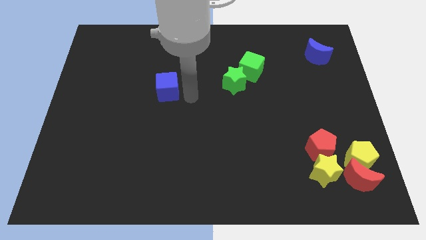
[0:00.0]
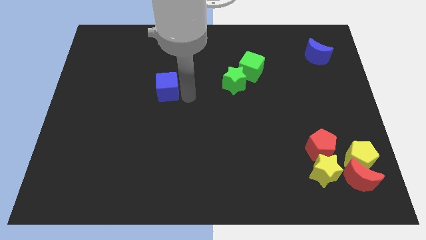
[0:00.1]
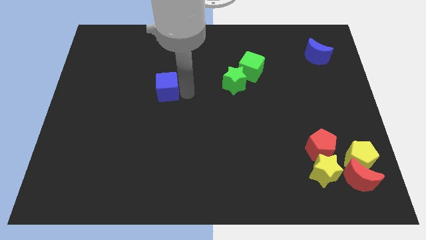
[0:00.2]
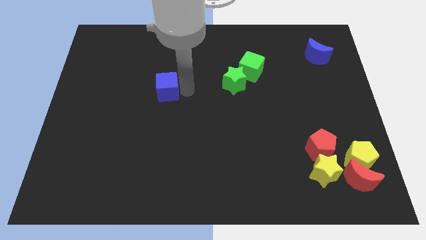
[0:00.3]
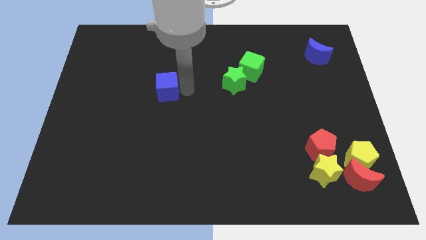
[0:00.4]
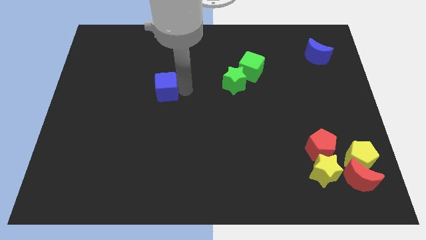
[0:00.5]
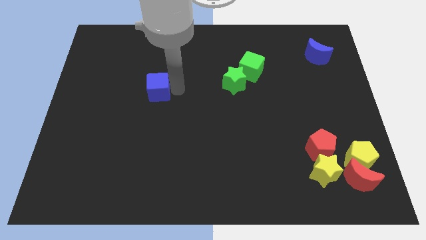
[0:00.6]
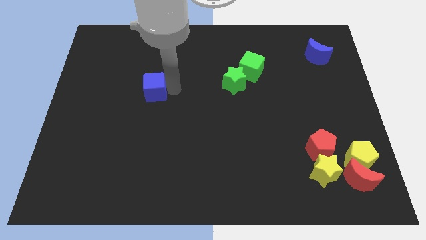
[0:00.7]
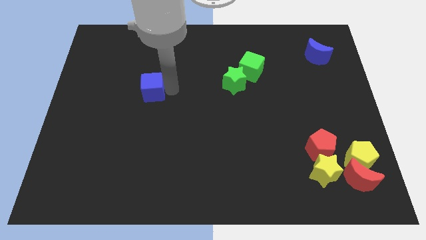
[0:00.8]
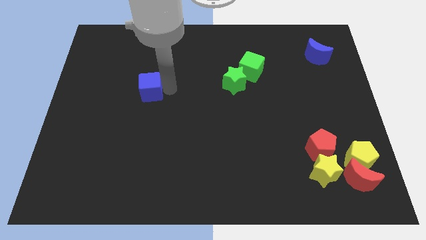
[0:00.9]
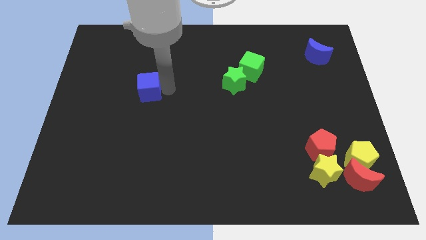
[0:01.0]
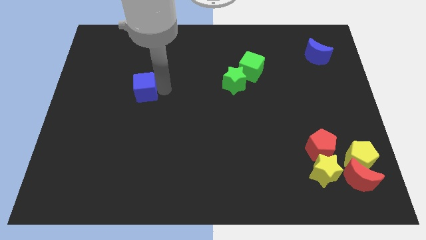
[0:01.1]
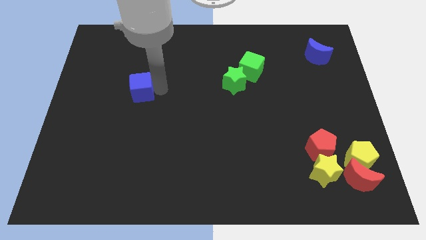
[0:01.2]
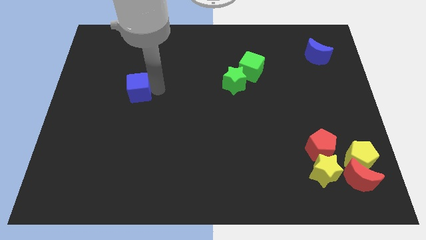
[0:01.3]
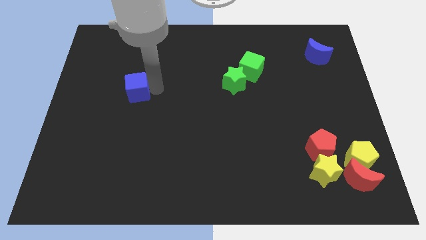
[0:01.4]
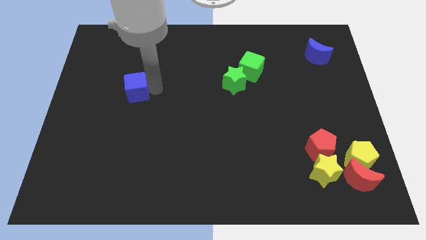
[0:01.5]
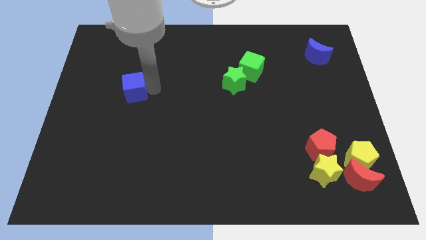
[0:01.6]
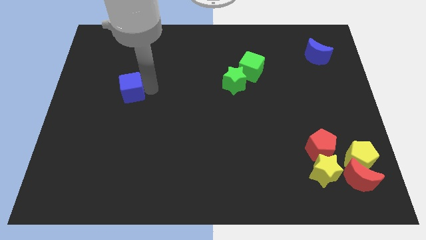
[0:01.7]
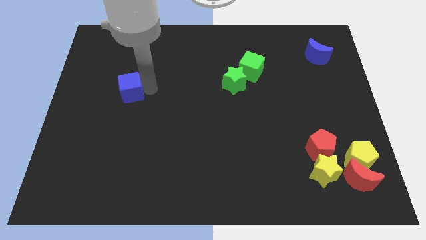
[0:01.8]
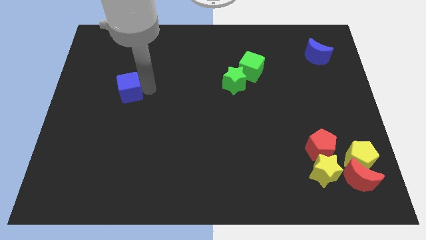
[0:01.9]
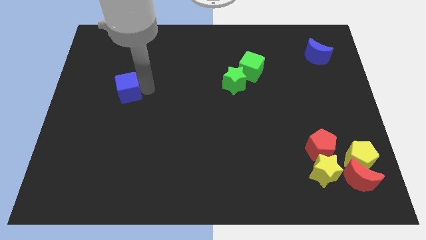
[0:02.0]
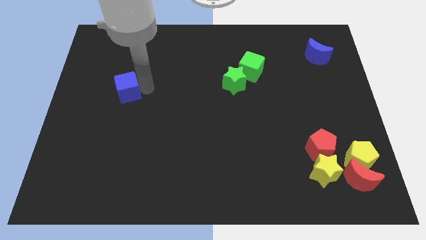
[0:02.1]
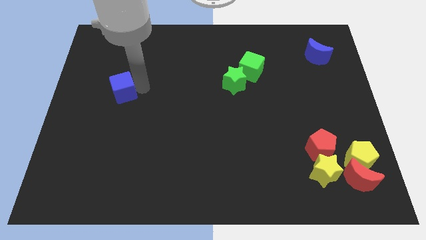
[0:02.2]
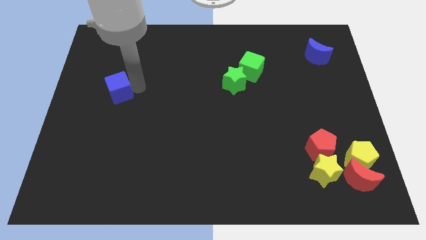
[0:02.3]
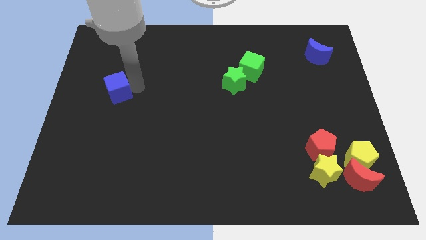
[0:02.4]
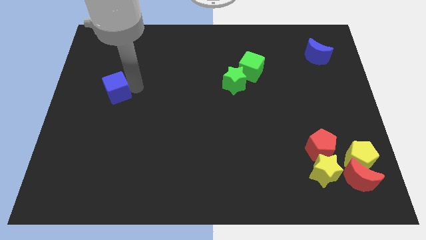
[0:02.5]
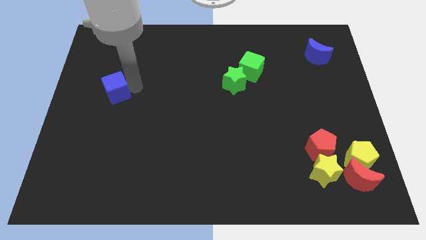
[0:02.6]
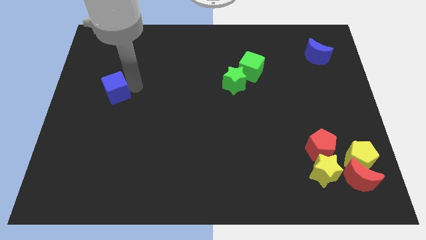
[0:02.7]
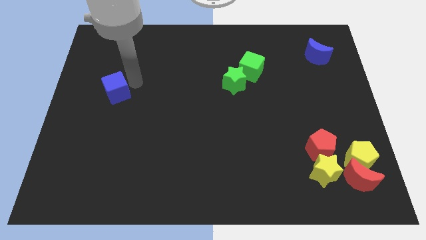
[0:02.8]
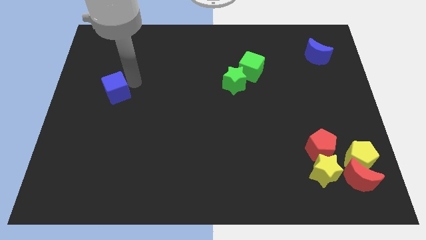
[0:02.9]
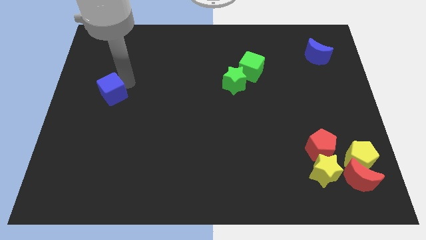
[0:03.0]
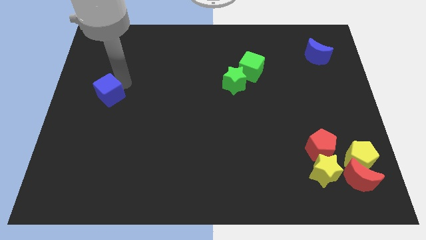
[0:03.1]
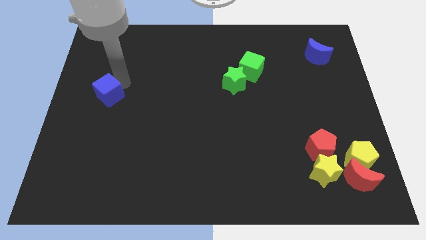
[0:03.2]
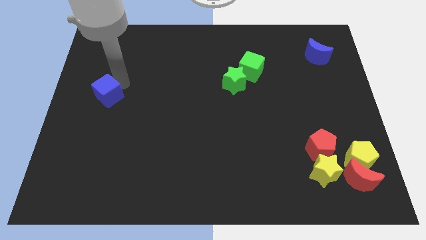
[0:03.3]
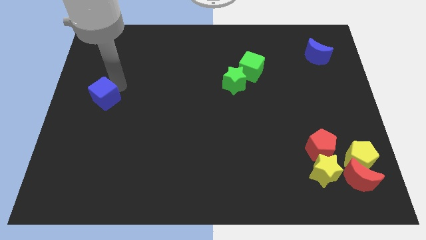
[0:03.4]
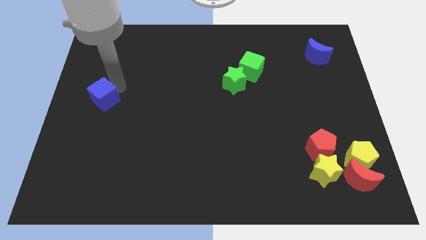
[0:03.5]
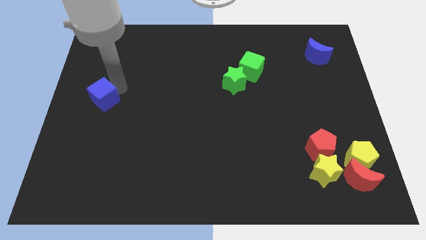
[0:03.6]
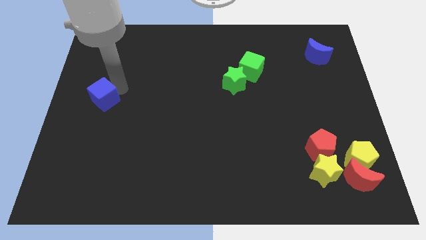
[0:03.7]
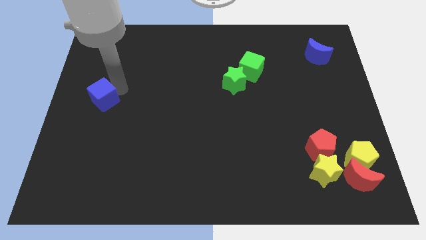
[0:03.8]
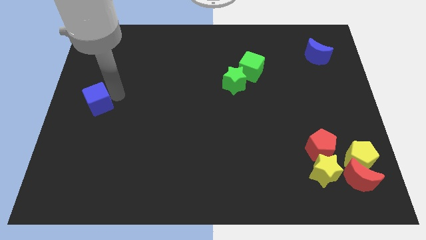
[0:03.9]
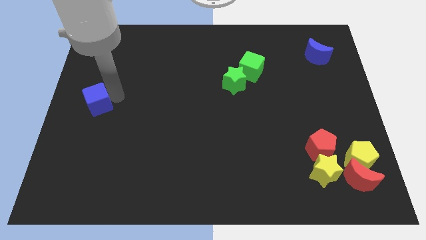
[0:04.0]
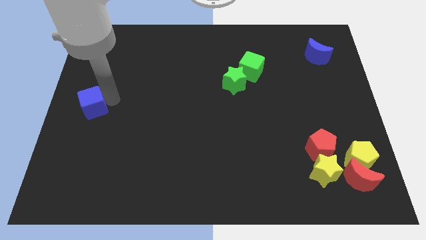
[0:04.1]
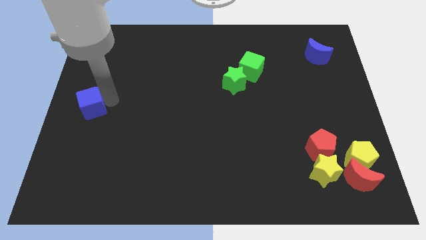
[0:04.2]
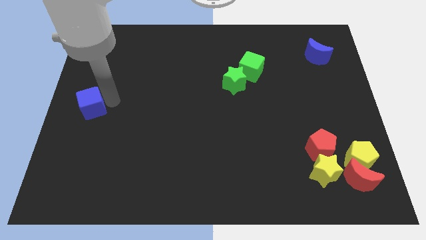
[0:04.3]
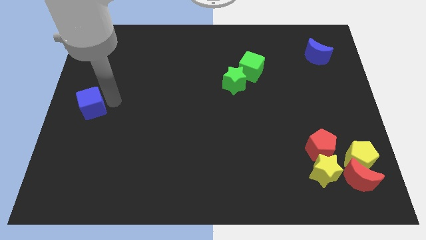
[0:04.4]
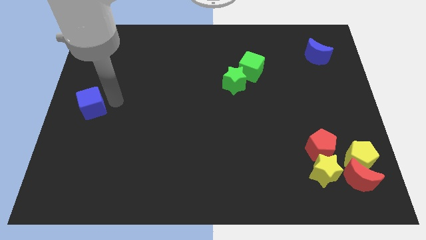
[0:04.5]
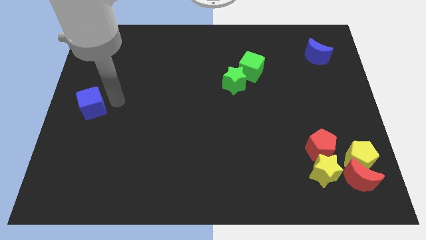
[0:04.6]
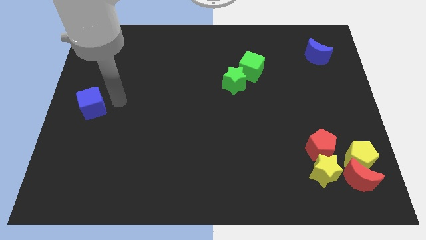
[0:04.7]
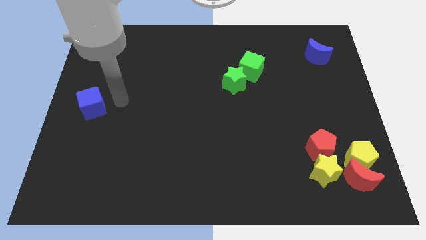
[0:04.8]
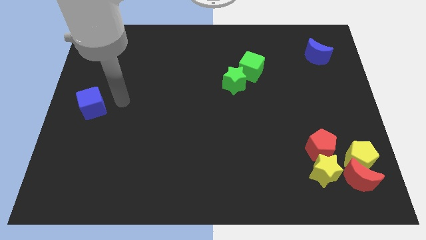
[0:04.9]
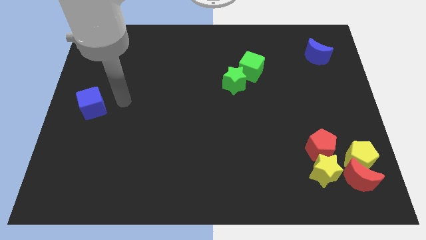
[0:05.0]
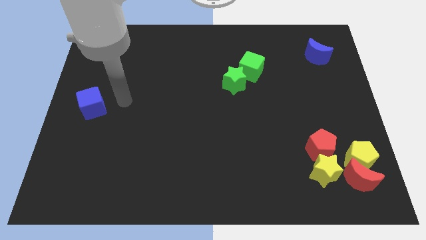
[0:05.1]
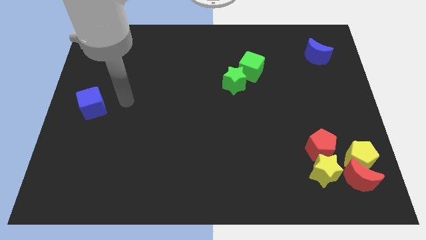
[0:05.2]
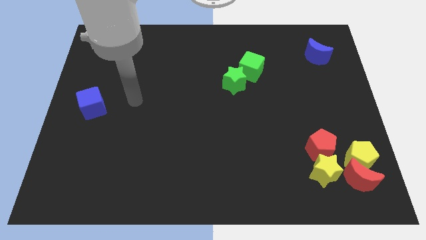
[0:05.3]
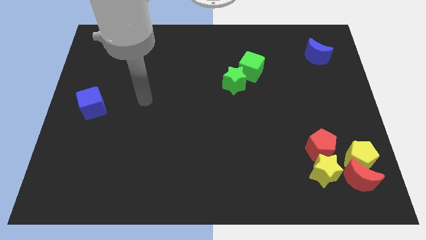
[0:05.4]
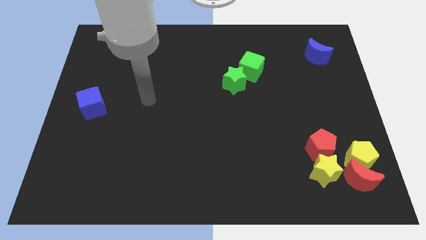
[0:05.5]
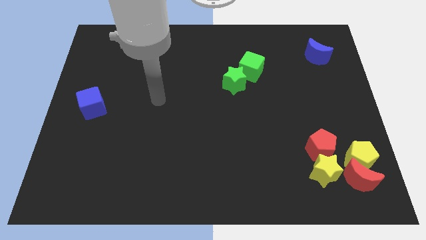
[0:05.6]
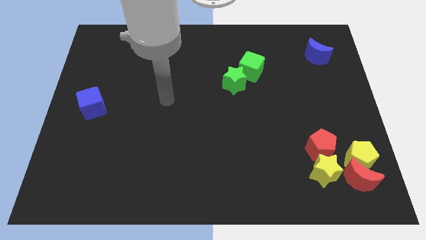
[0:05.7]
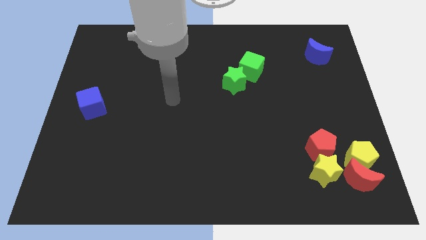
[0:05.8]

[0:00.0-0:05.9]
push the blue cube towards the left center

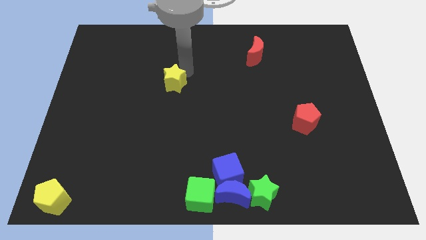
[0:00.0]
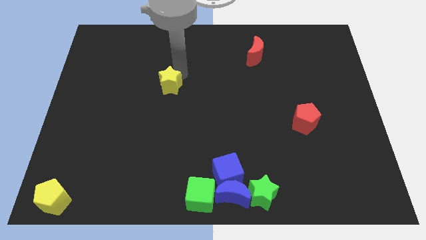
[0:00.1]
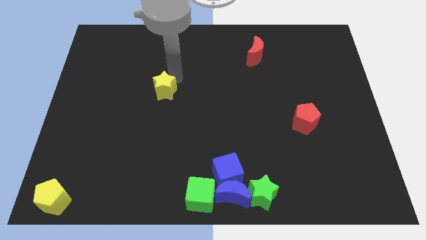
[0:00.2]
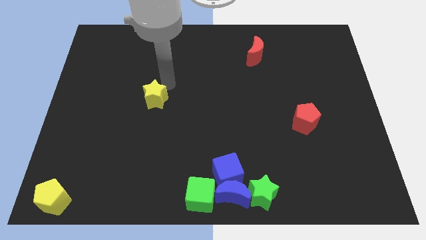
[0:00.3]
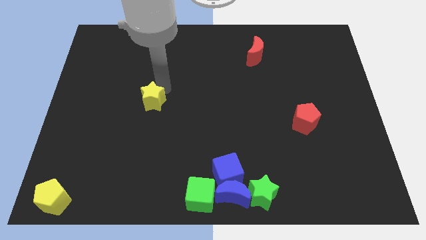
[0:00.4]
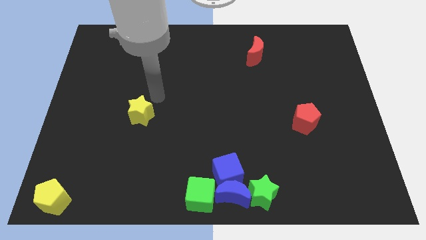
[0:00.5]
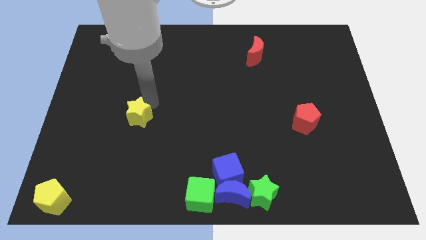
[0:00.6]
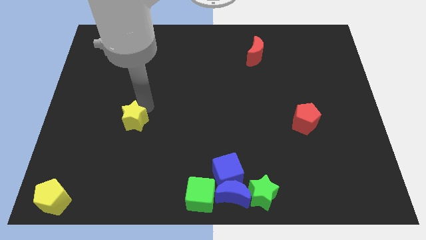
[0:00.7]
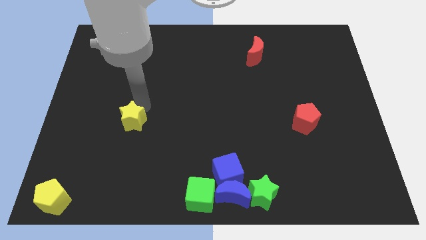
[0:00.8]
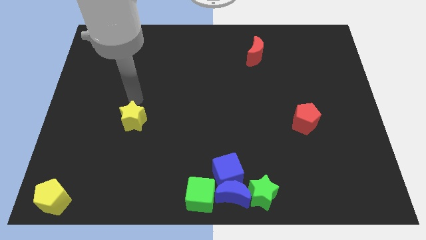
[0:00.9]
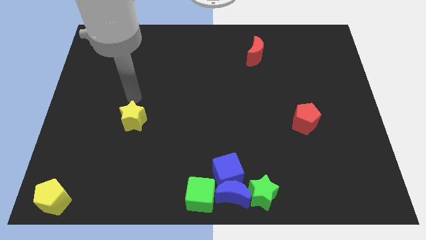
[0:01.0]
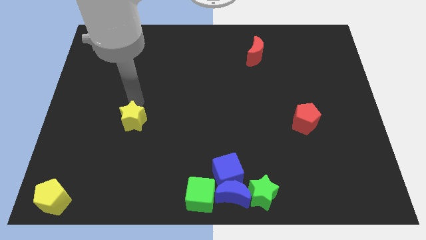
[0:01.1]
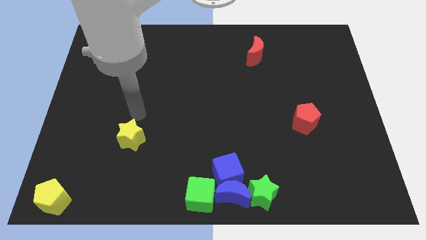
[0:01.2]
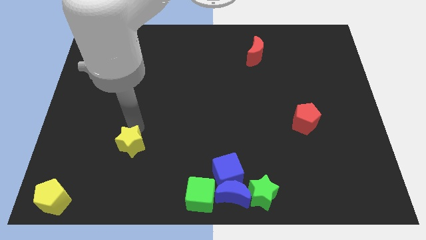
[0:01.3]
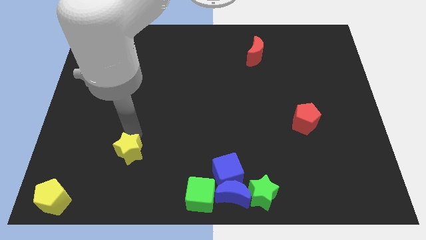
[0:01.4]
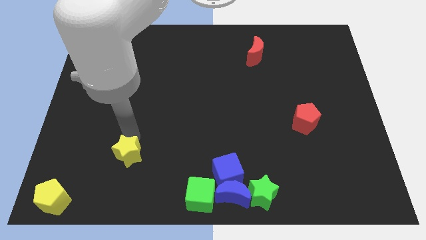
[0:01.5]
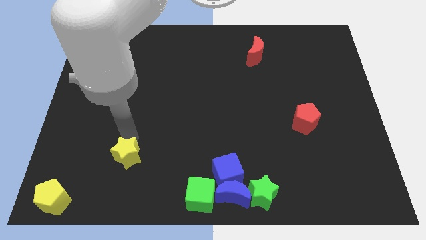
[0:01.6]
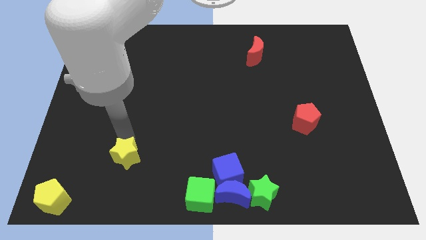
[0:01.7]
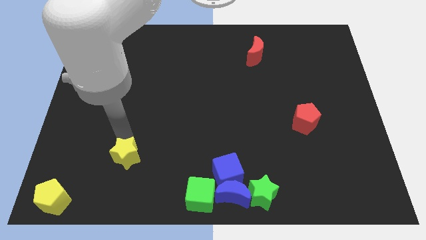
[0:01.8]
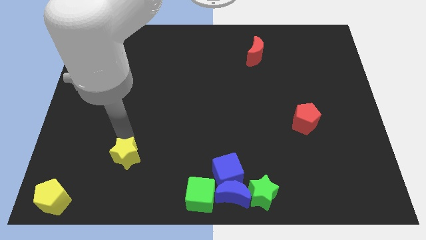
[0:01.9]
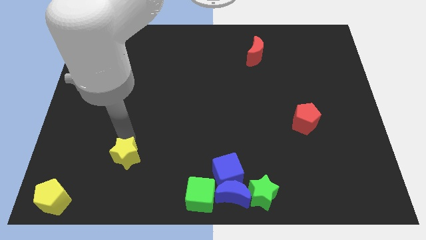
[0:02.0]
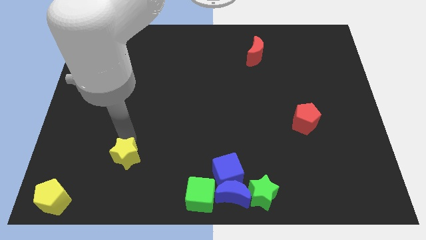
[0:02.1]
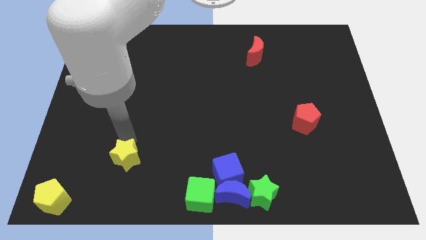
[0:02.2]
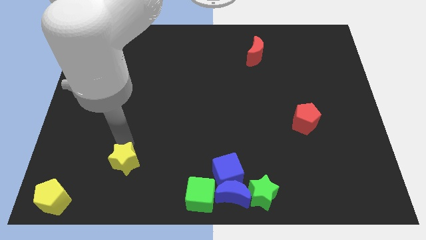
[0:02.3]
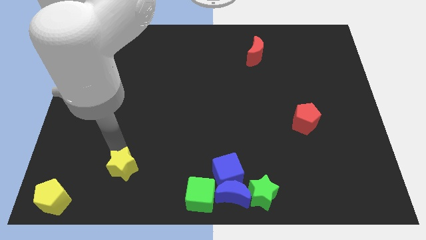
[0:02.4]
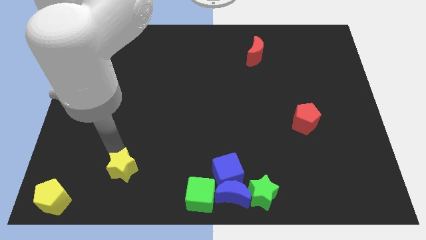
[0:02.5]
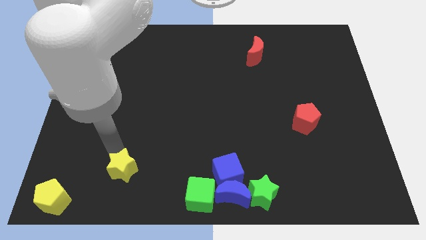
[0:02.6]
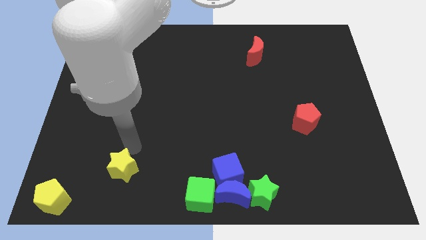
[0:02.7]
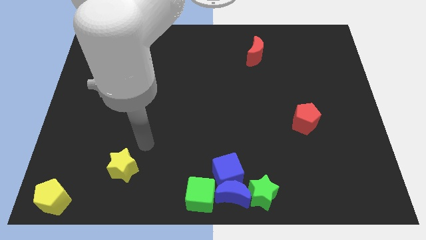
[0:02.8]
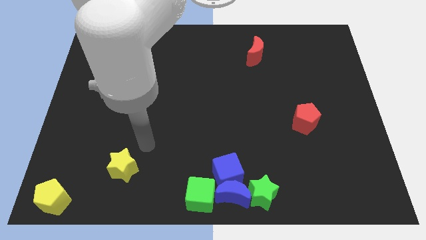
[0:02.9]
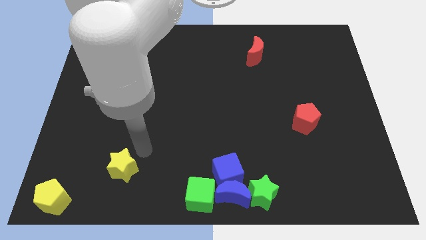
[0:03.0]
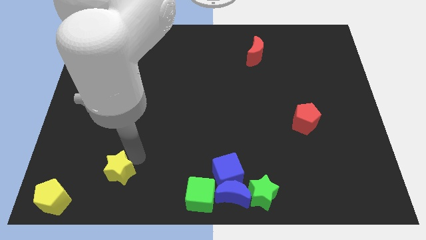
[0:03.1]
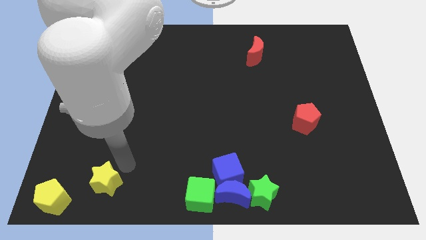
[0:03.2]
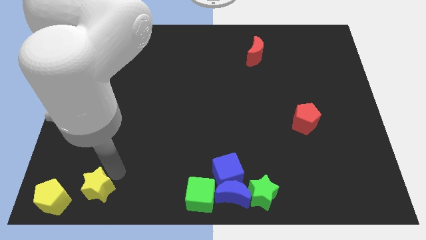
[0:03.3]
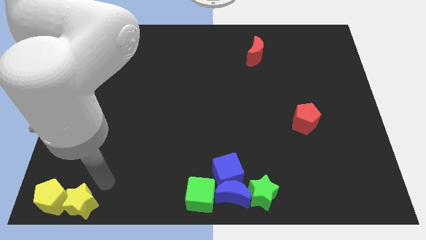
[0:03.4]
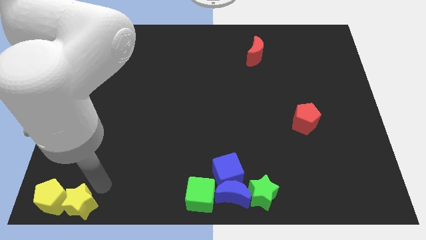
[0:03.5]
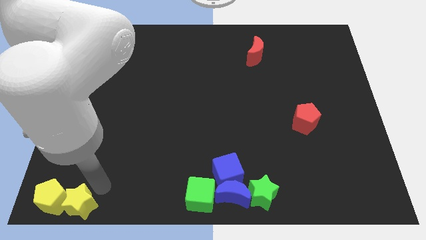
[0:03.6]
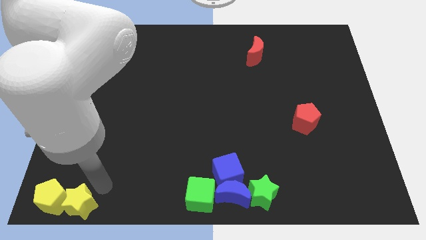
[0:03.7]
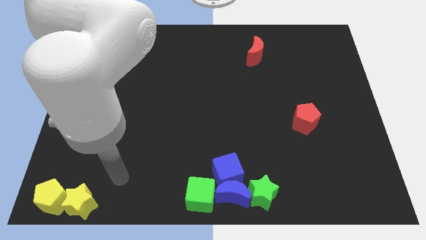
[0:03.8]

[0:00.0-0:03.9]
push the yellow star right to the yellow pentagon
